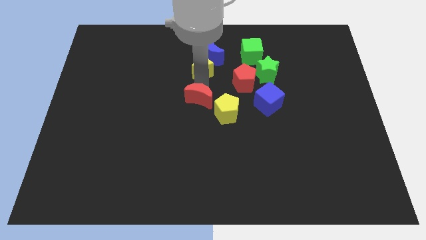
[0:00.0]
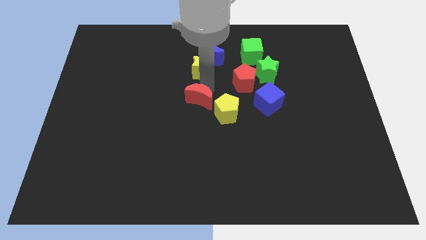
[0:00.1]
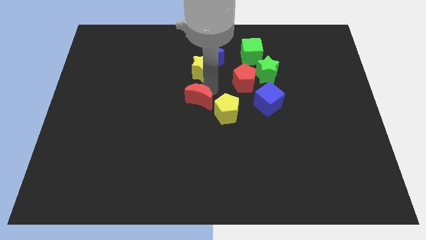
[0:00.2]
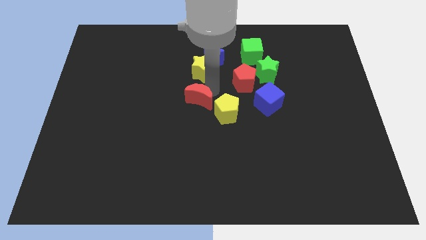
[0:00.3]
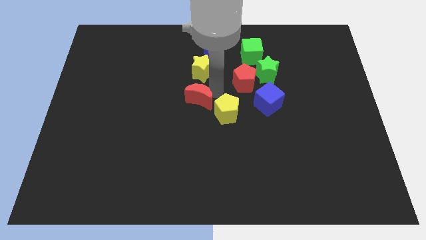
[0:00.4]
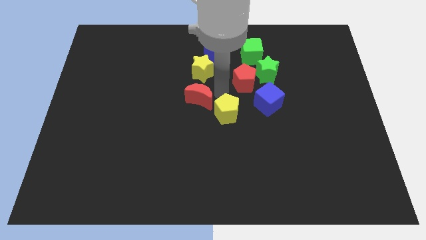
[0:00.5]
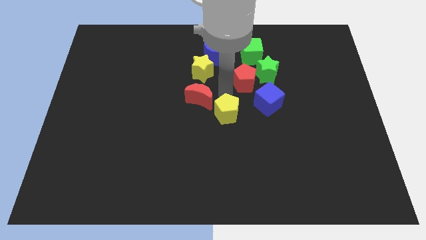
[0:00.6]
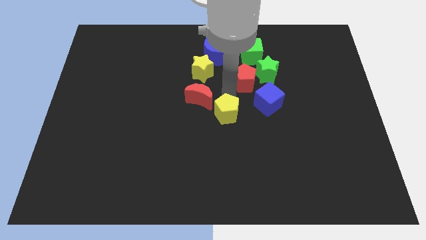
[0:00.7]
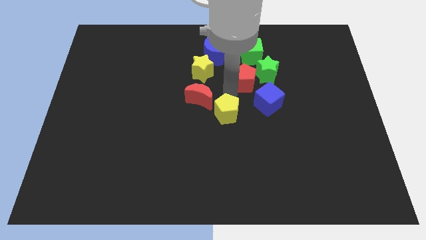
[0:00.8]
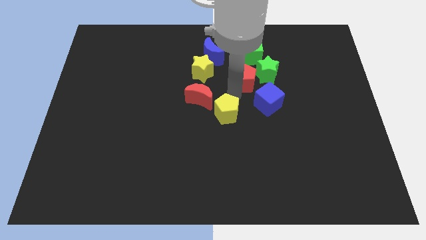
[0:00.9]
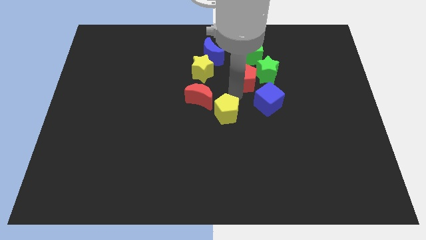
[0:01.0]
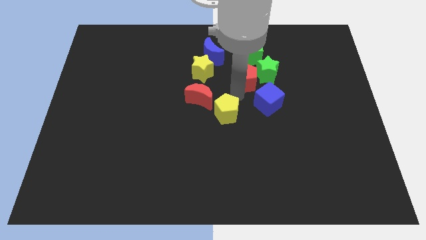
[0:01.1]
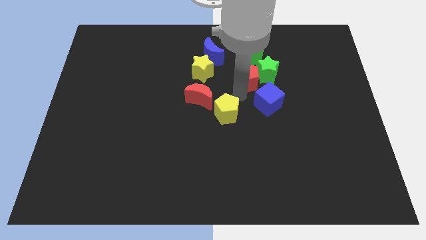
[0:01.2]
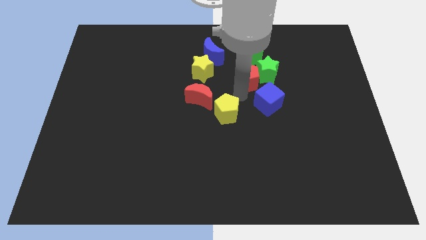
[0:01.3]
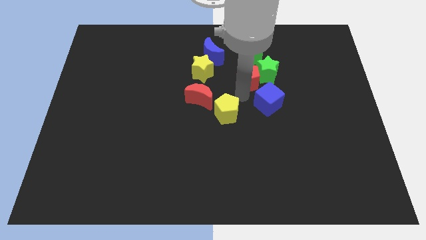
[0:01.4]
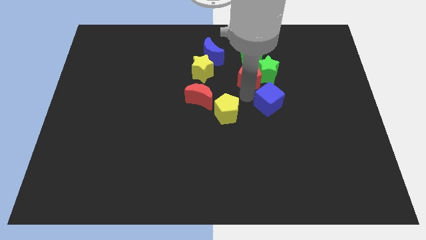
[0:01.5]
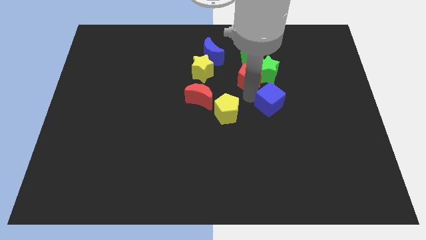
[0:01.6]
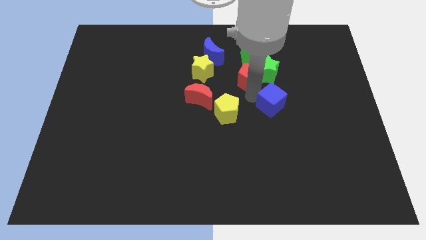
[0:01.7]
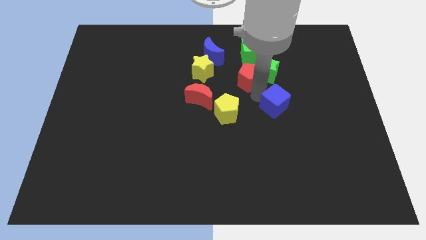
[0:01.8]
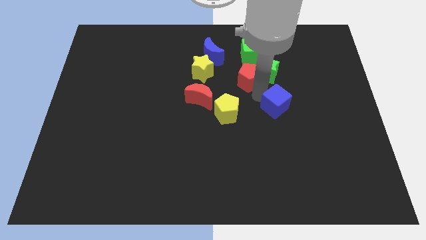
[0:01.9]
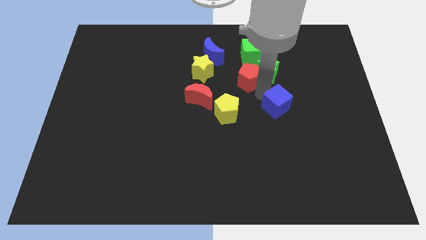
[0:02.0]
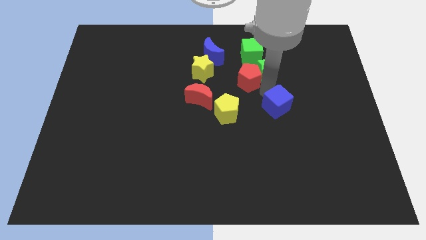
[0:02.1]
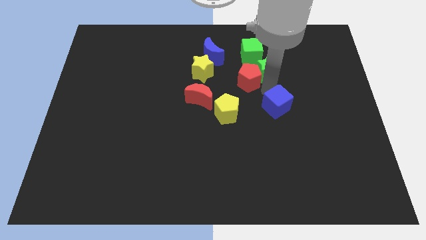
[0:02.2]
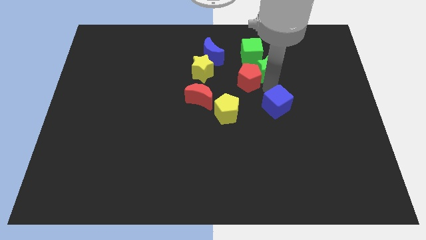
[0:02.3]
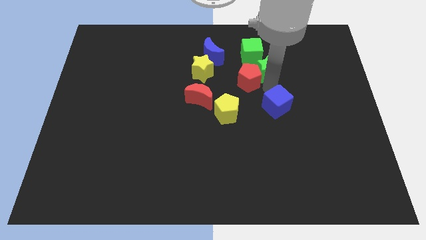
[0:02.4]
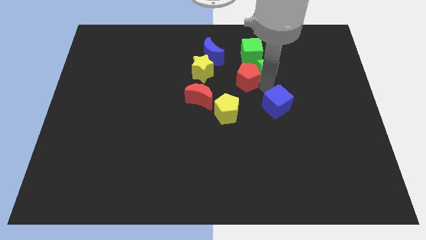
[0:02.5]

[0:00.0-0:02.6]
touch the blue cube slightly

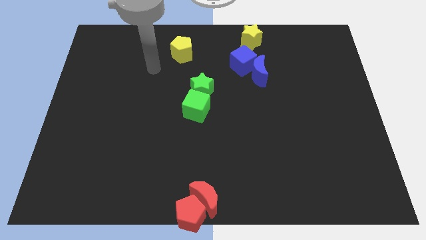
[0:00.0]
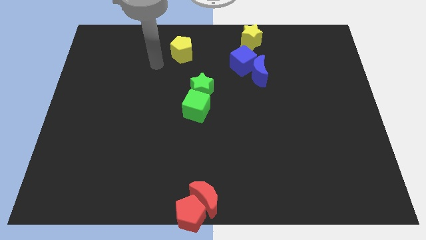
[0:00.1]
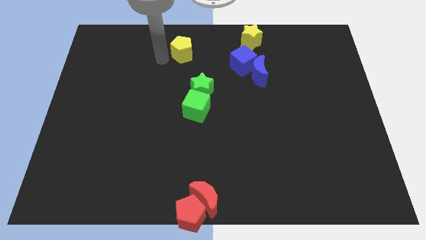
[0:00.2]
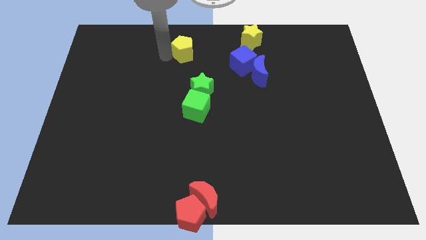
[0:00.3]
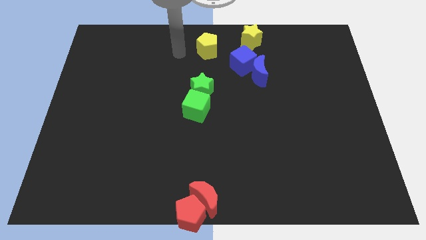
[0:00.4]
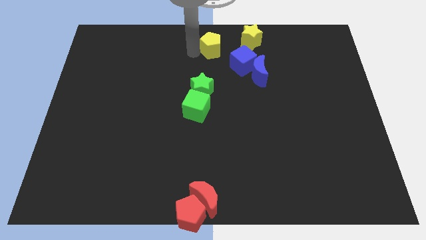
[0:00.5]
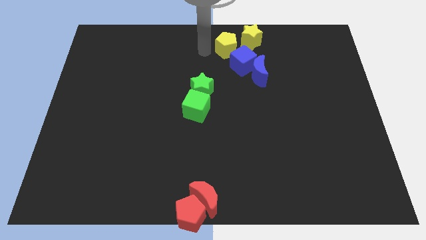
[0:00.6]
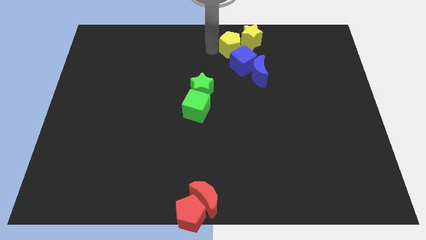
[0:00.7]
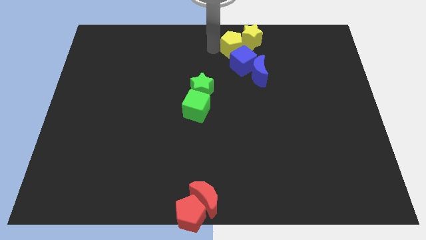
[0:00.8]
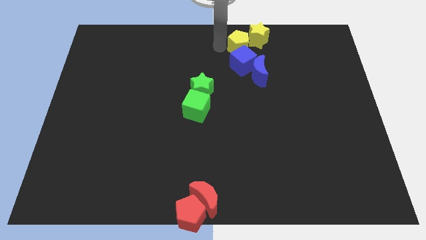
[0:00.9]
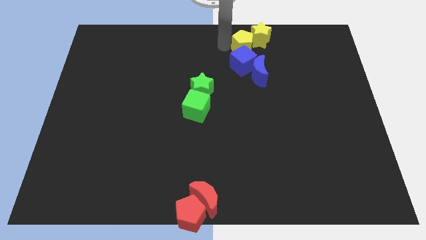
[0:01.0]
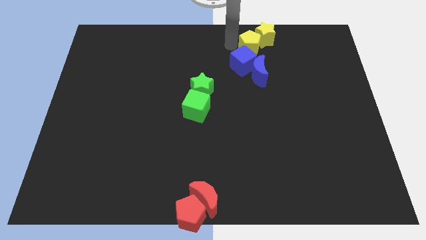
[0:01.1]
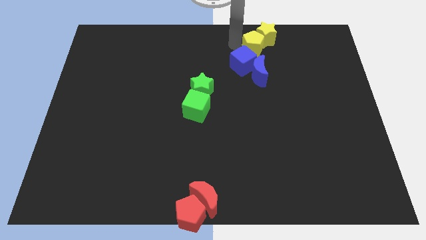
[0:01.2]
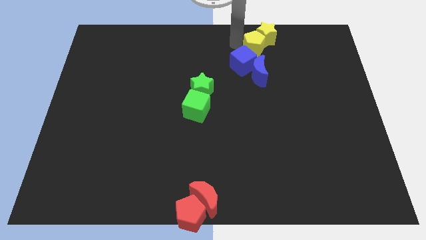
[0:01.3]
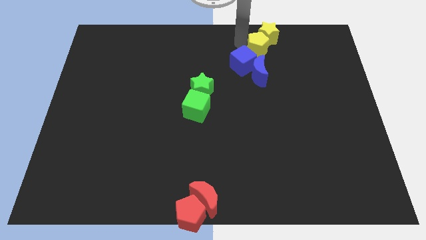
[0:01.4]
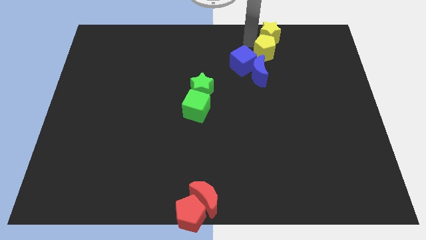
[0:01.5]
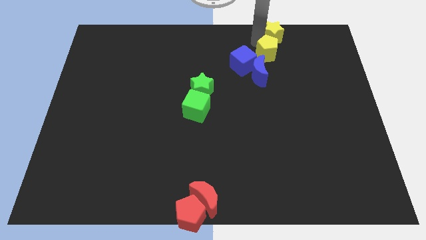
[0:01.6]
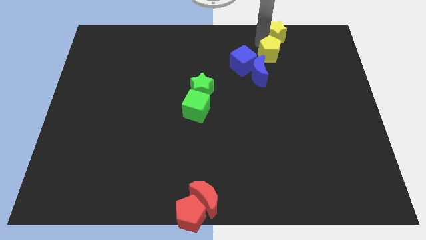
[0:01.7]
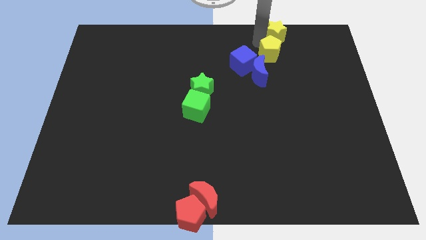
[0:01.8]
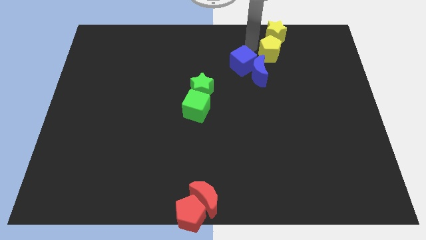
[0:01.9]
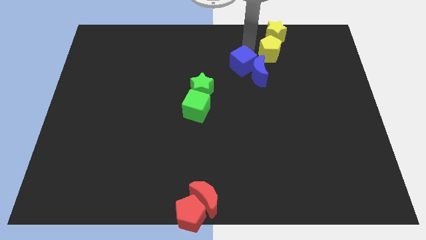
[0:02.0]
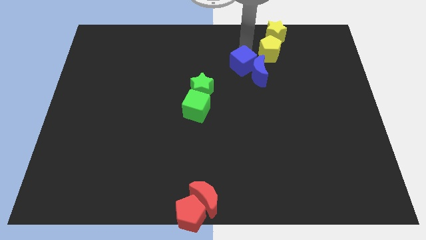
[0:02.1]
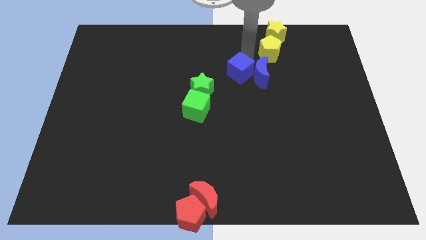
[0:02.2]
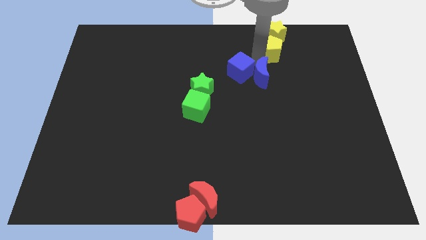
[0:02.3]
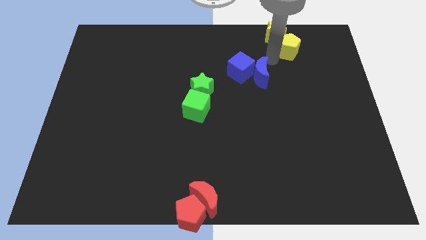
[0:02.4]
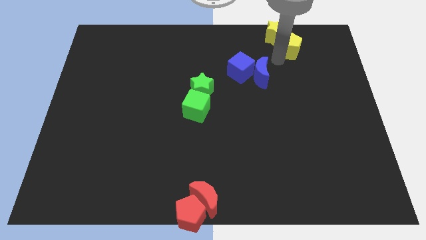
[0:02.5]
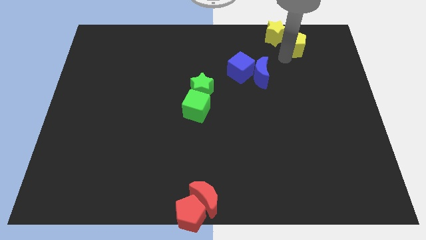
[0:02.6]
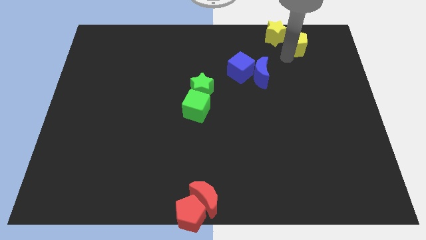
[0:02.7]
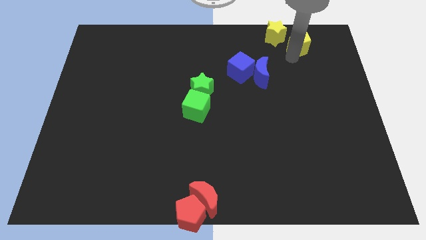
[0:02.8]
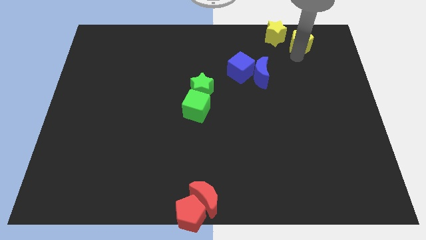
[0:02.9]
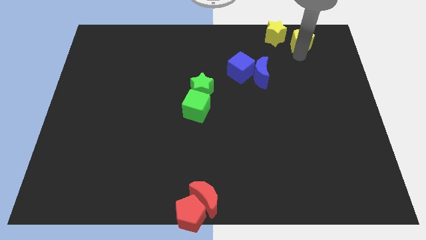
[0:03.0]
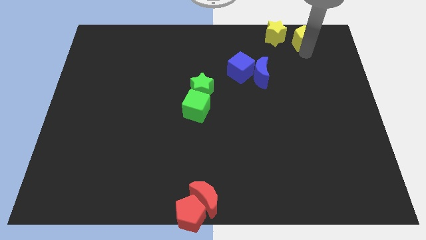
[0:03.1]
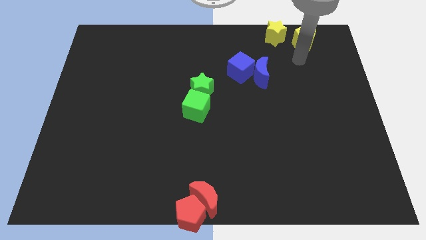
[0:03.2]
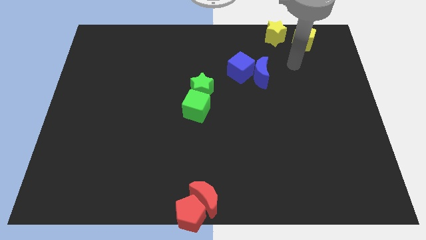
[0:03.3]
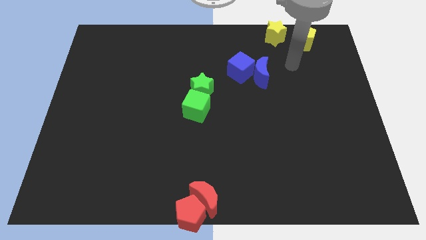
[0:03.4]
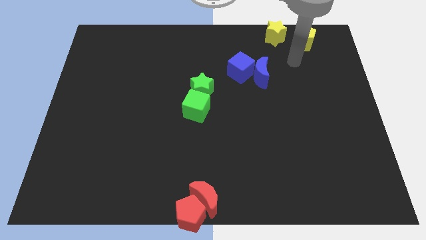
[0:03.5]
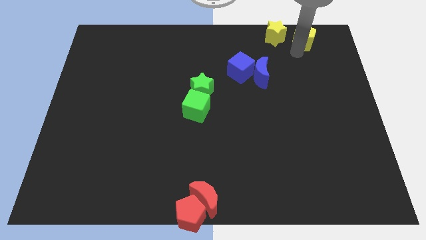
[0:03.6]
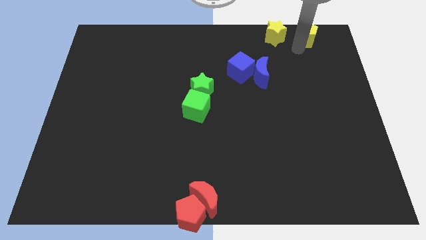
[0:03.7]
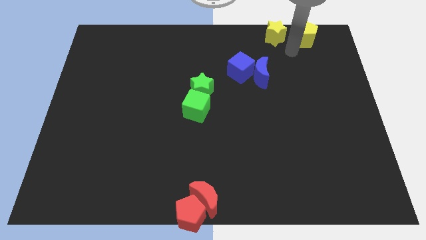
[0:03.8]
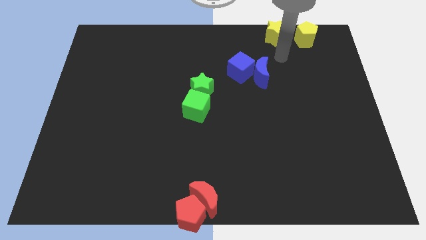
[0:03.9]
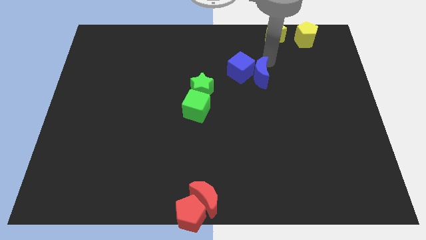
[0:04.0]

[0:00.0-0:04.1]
push the yellow pentagon towards the top right corner

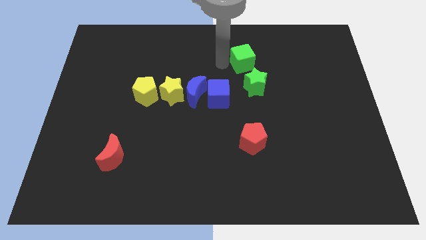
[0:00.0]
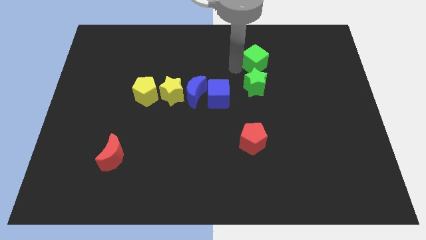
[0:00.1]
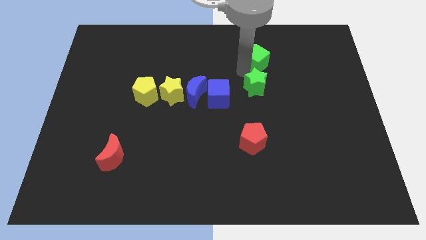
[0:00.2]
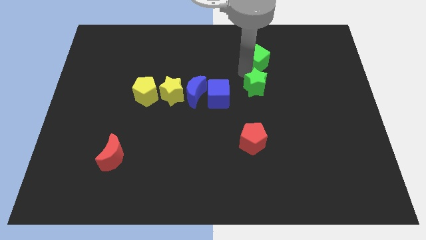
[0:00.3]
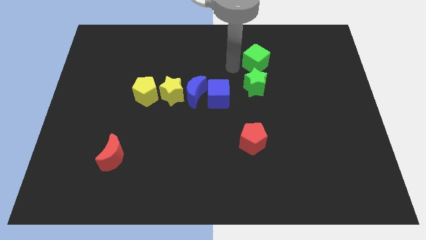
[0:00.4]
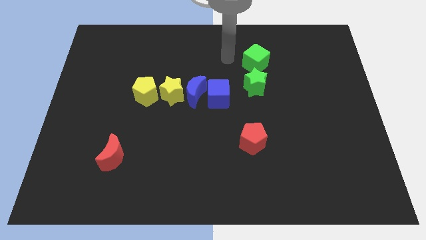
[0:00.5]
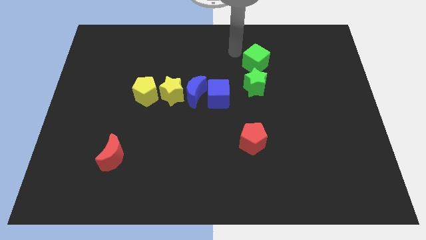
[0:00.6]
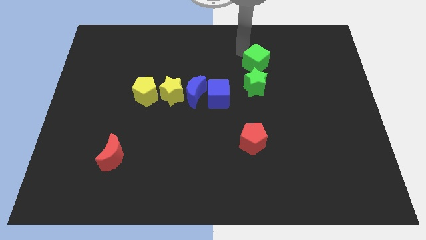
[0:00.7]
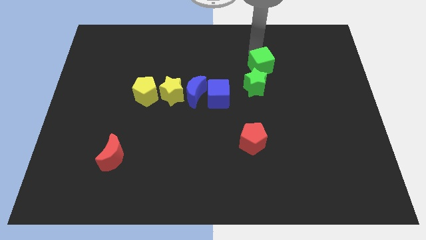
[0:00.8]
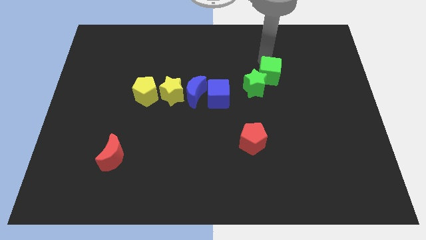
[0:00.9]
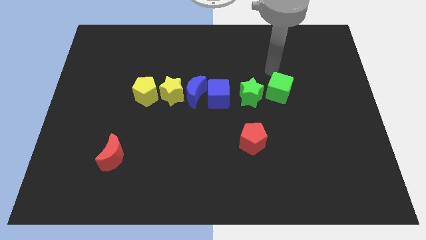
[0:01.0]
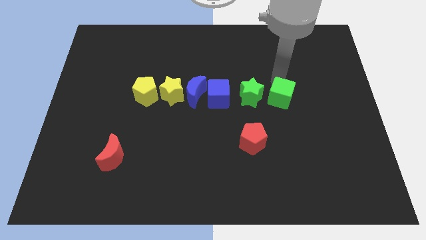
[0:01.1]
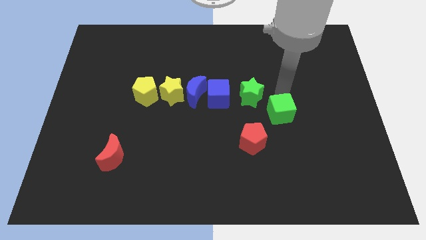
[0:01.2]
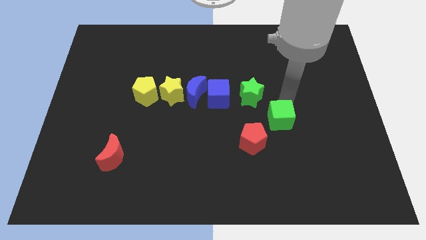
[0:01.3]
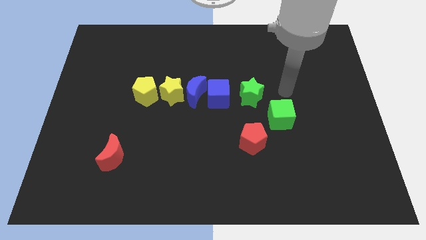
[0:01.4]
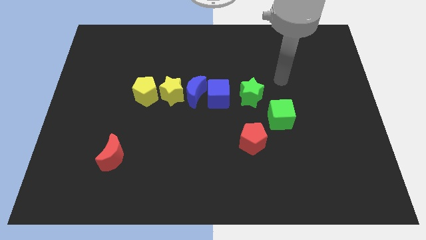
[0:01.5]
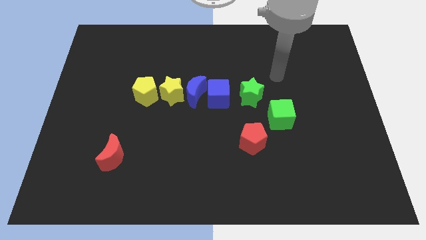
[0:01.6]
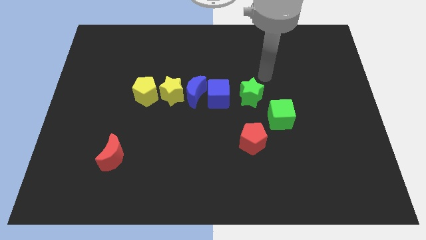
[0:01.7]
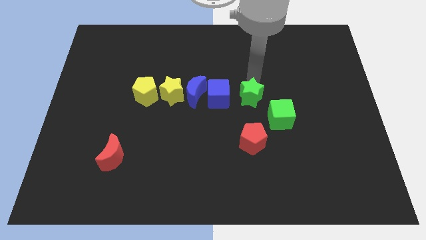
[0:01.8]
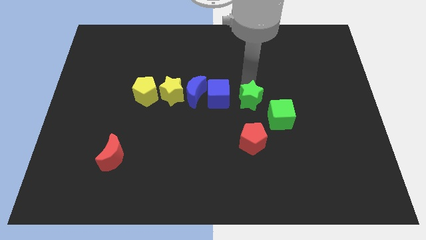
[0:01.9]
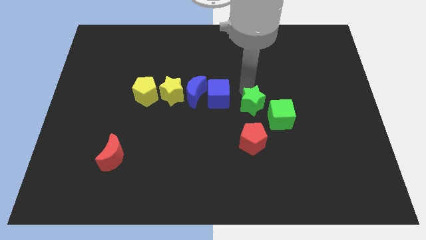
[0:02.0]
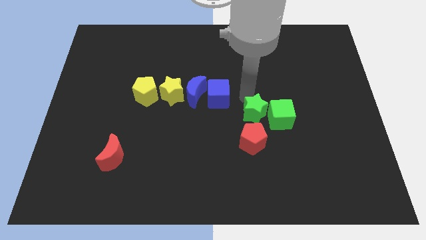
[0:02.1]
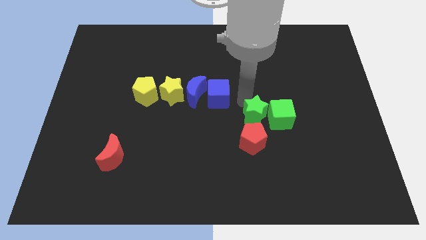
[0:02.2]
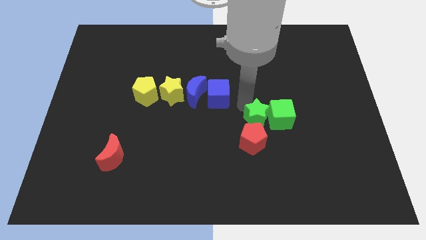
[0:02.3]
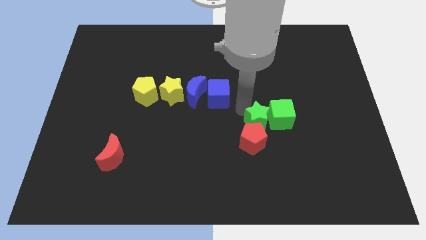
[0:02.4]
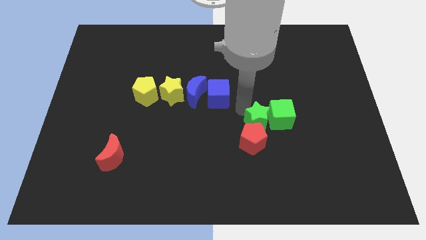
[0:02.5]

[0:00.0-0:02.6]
push the green star and the green cube towards the red pentagon
